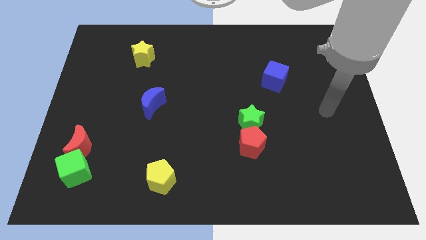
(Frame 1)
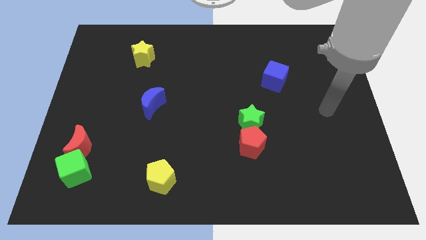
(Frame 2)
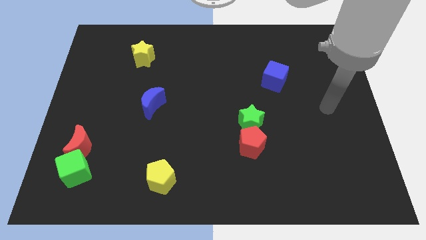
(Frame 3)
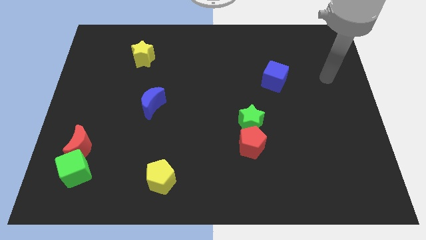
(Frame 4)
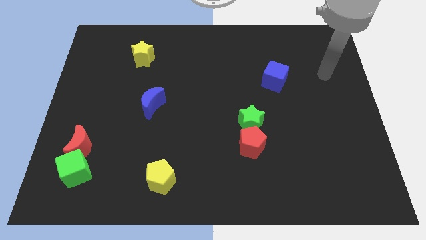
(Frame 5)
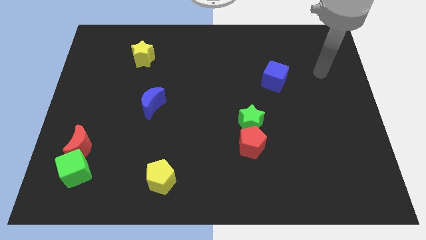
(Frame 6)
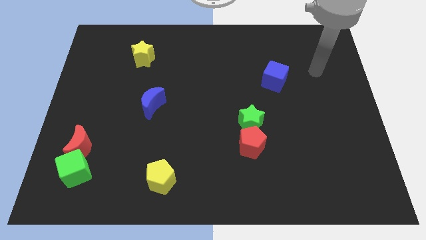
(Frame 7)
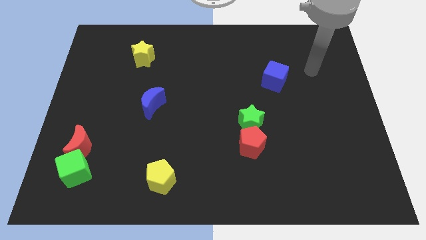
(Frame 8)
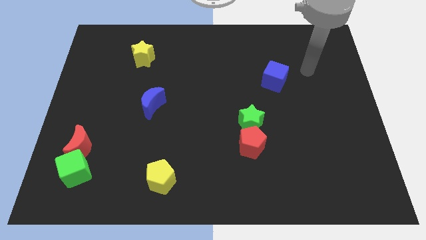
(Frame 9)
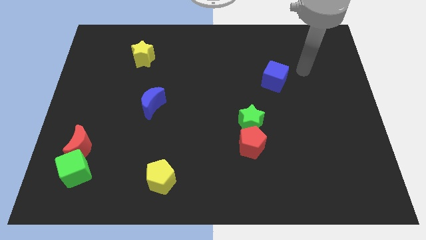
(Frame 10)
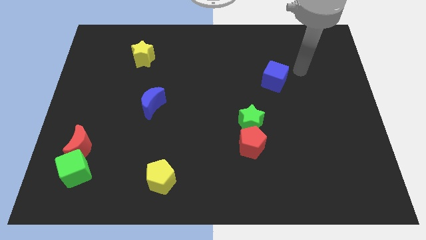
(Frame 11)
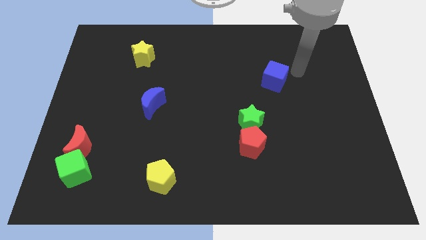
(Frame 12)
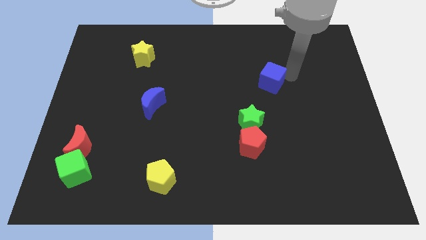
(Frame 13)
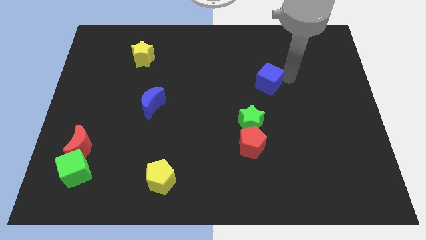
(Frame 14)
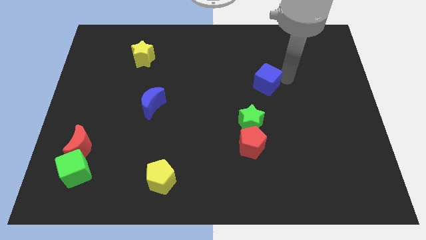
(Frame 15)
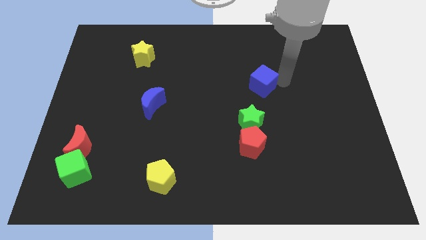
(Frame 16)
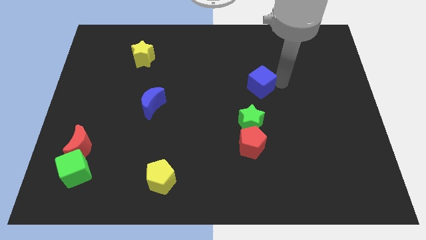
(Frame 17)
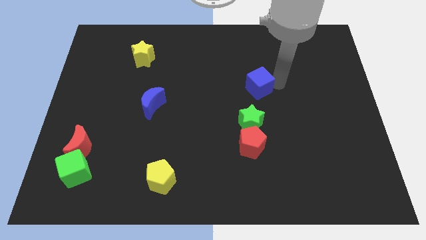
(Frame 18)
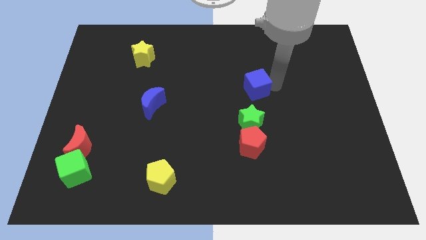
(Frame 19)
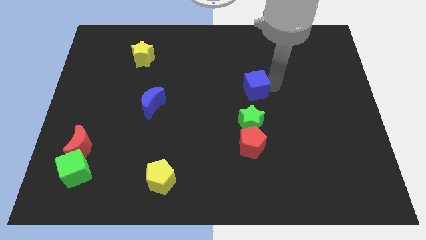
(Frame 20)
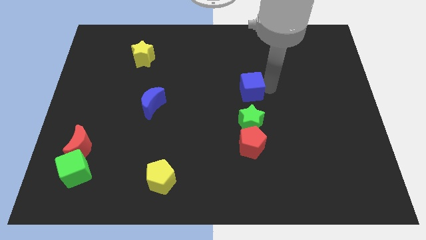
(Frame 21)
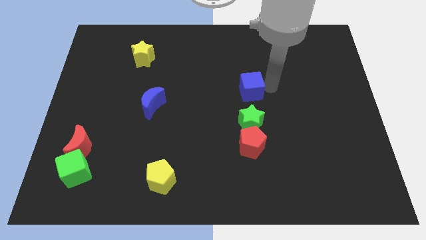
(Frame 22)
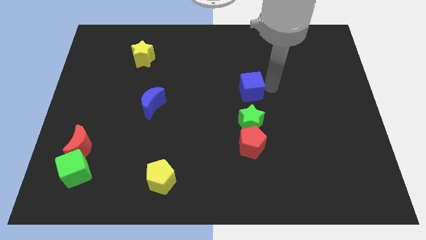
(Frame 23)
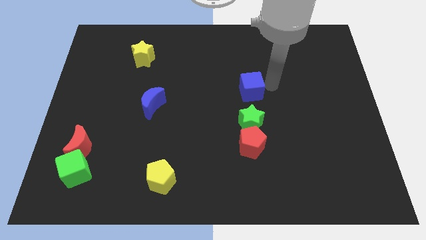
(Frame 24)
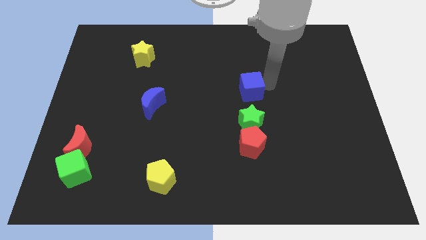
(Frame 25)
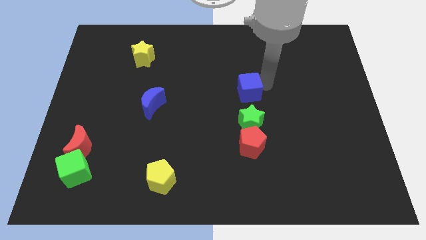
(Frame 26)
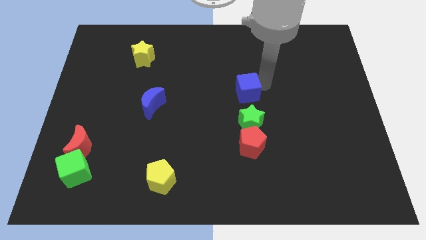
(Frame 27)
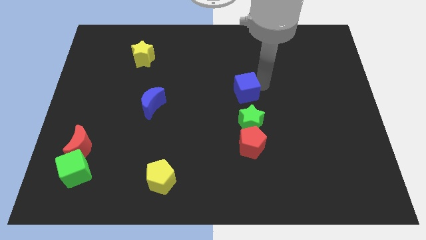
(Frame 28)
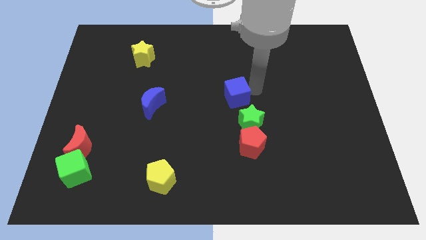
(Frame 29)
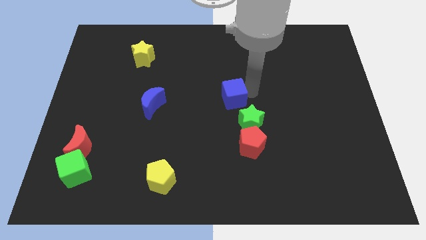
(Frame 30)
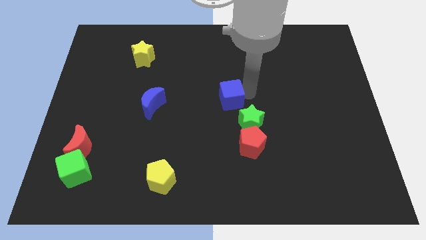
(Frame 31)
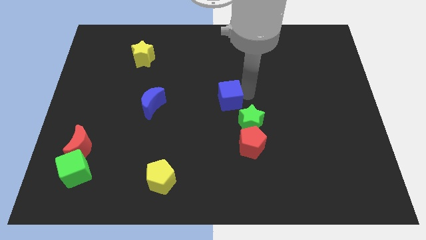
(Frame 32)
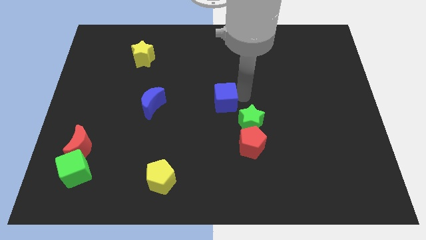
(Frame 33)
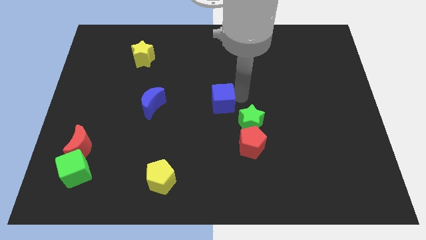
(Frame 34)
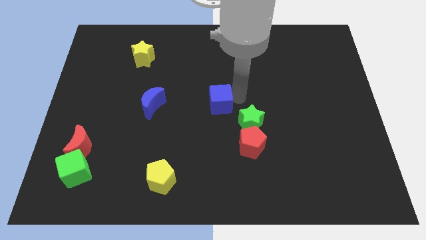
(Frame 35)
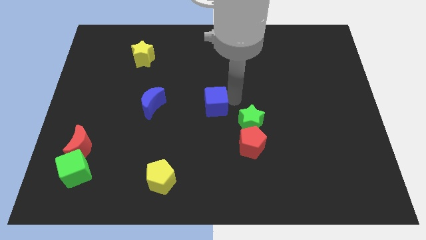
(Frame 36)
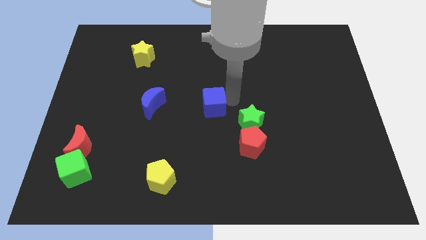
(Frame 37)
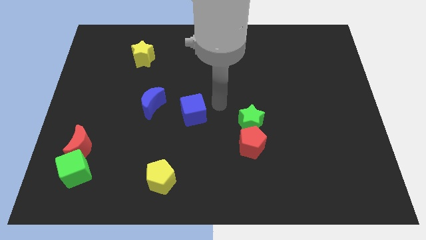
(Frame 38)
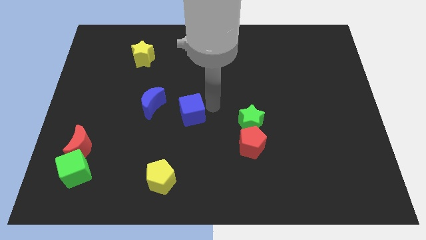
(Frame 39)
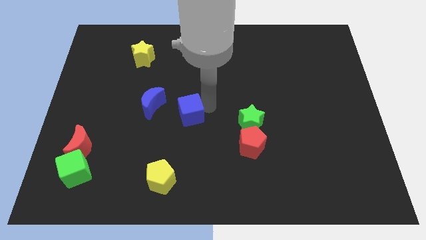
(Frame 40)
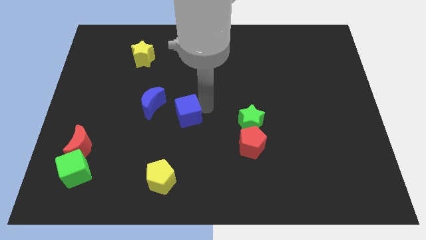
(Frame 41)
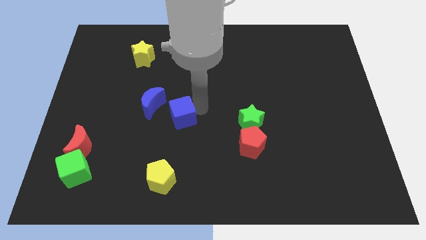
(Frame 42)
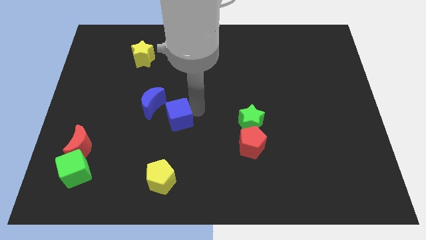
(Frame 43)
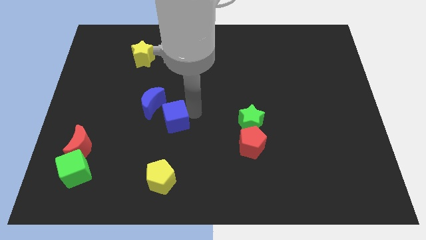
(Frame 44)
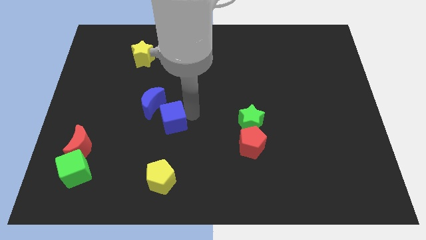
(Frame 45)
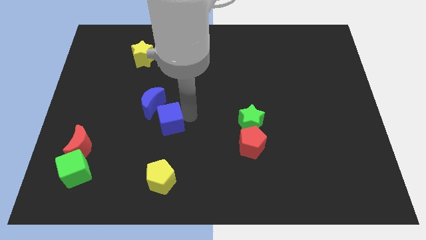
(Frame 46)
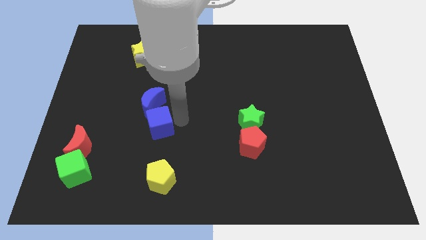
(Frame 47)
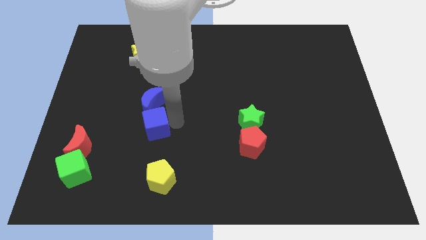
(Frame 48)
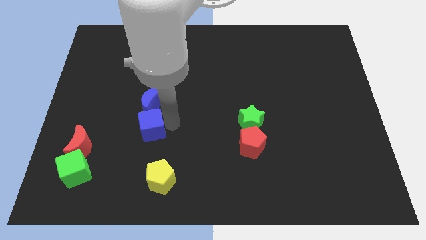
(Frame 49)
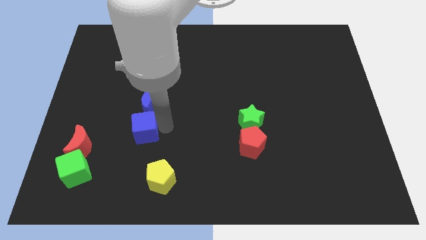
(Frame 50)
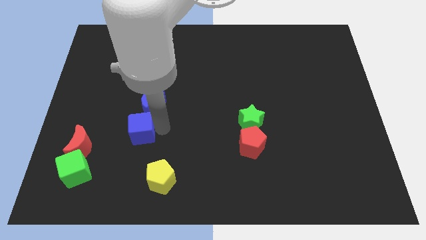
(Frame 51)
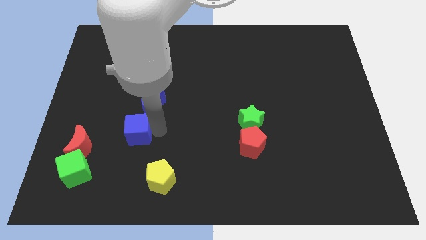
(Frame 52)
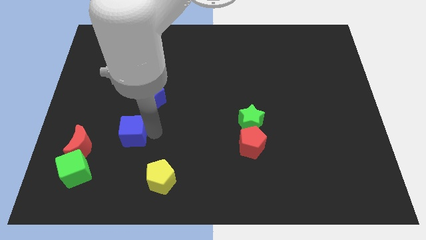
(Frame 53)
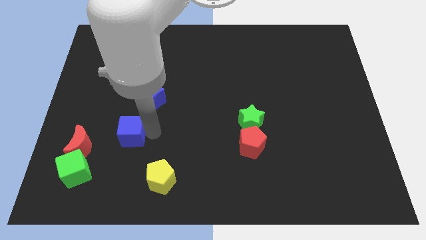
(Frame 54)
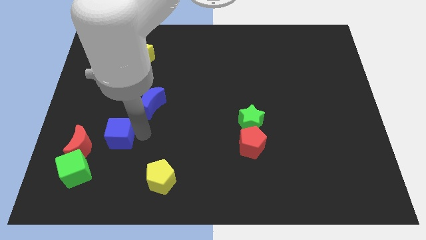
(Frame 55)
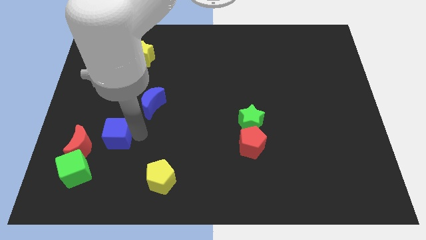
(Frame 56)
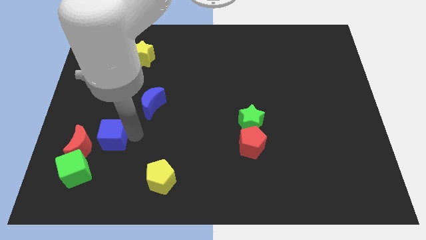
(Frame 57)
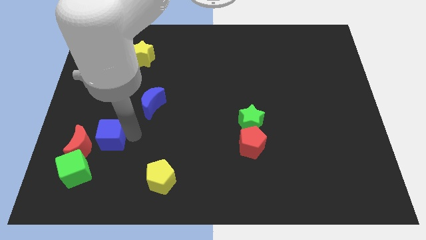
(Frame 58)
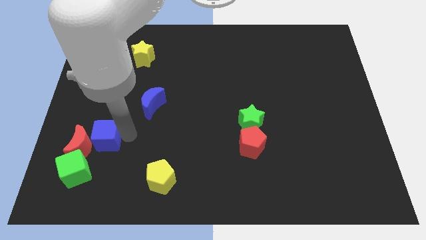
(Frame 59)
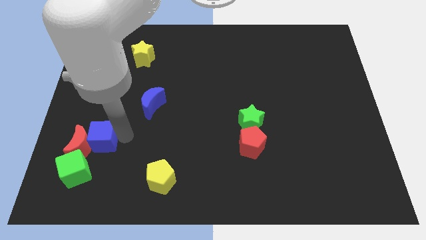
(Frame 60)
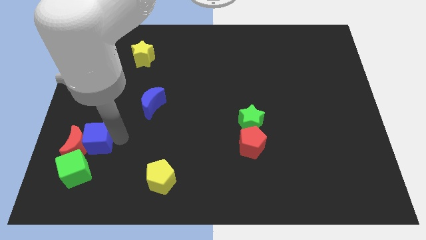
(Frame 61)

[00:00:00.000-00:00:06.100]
put the blue cube next to the red moon

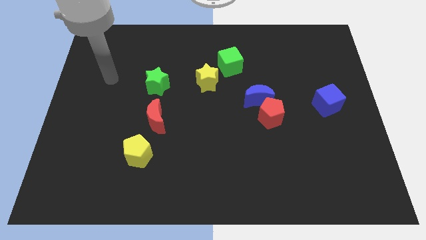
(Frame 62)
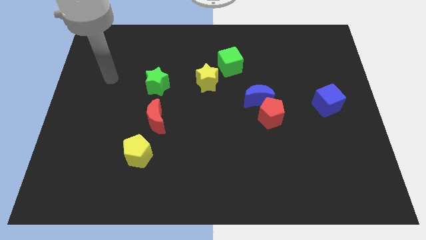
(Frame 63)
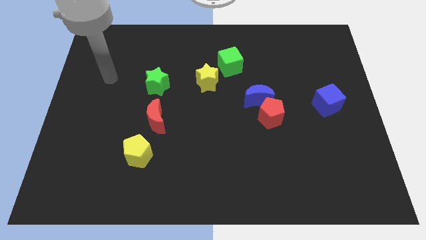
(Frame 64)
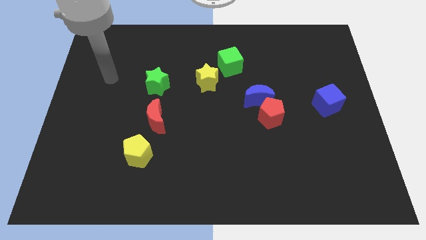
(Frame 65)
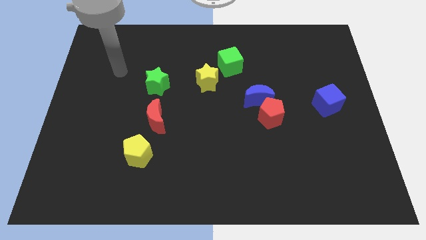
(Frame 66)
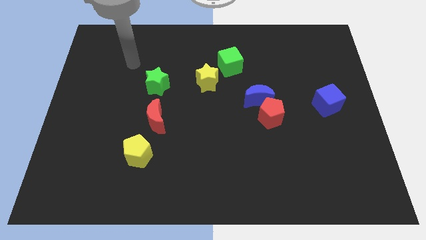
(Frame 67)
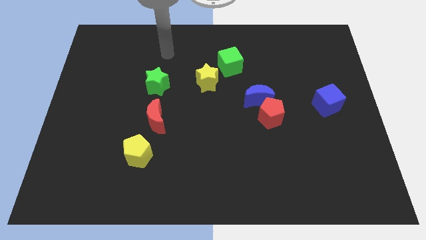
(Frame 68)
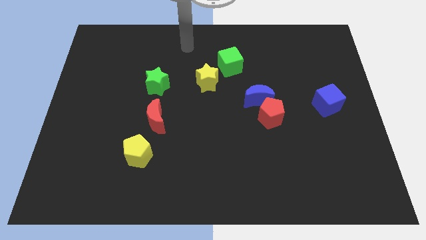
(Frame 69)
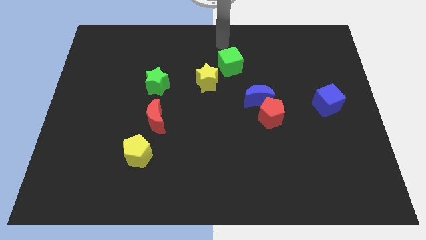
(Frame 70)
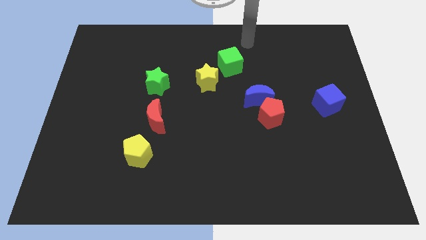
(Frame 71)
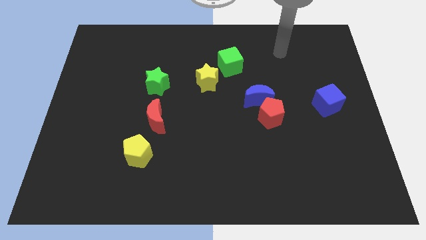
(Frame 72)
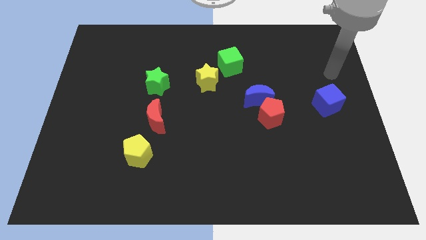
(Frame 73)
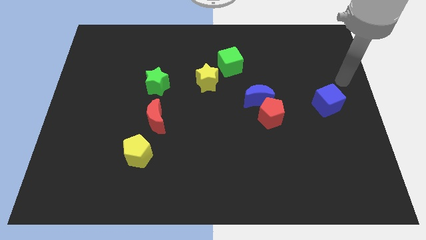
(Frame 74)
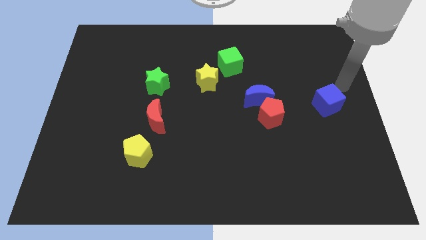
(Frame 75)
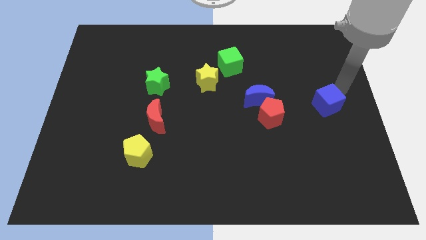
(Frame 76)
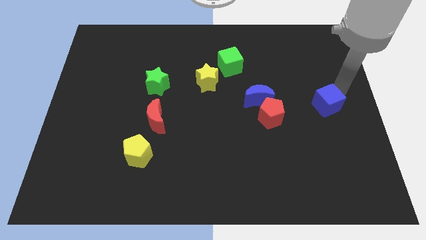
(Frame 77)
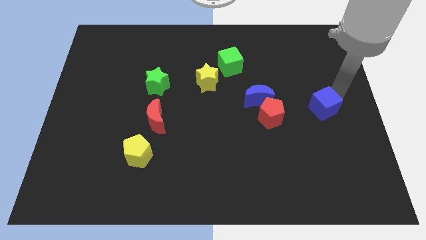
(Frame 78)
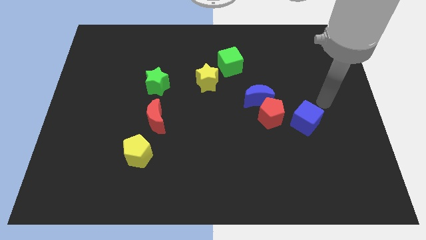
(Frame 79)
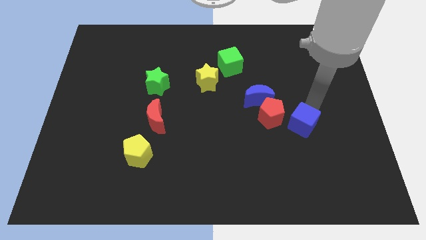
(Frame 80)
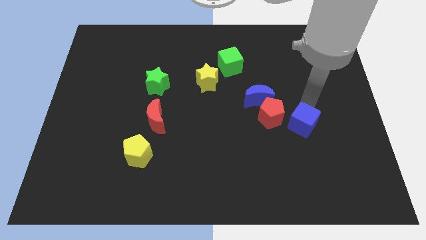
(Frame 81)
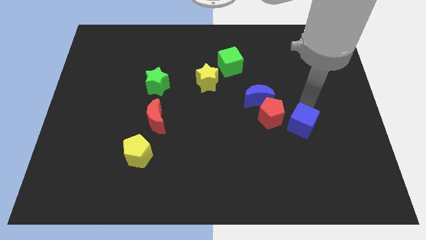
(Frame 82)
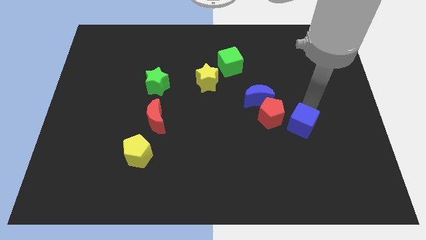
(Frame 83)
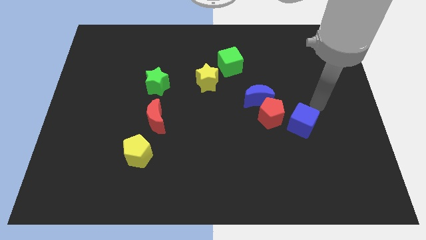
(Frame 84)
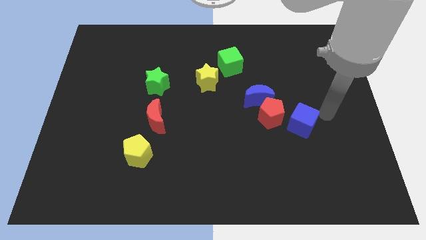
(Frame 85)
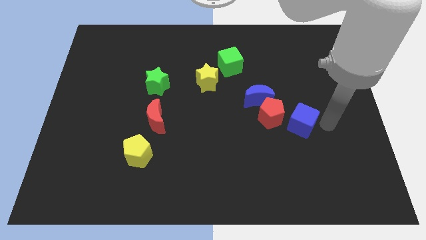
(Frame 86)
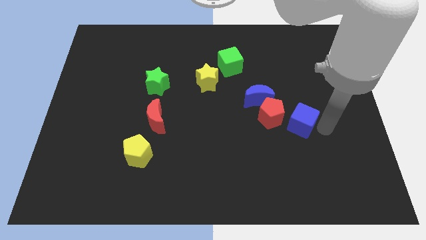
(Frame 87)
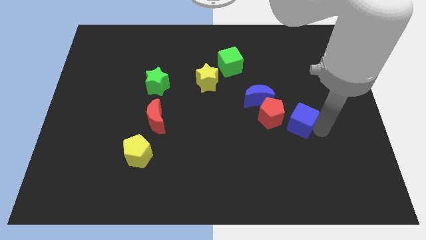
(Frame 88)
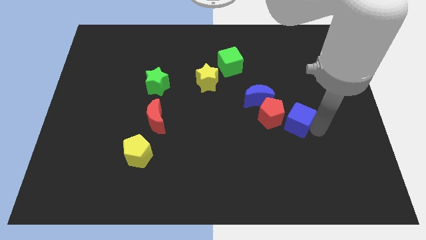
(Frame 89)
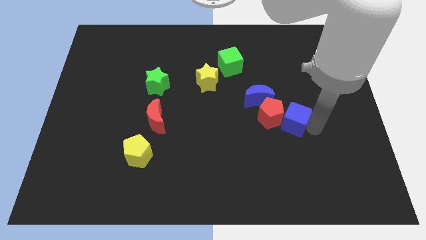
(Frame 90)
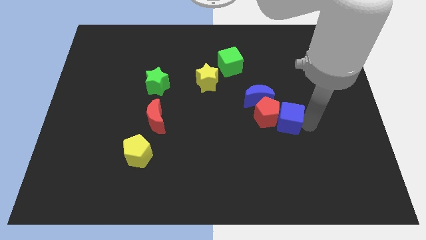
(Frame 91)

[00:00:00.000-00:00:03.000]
move the blue cube close to the red pentagon
